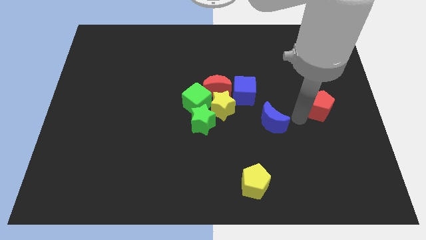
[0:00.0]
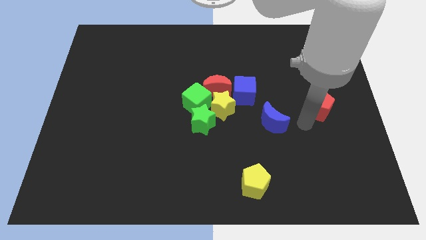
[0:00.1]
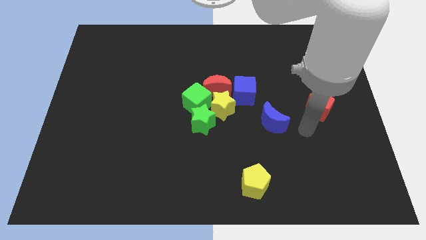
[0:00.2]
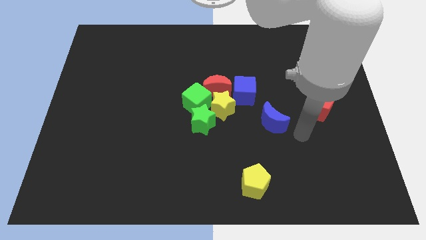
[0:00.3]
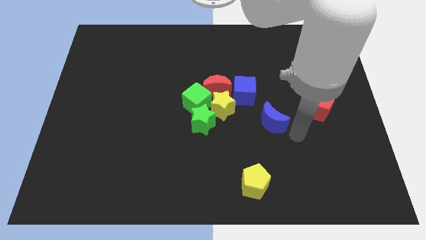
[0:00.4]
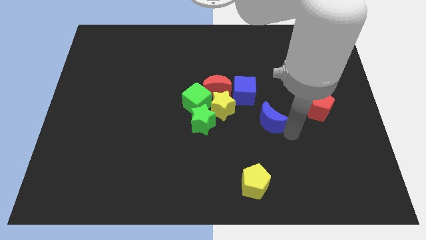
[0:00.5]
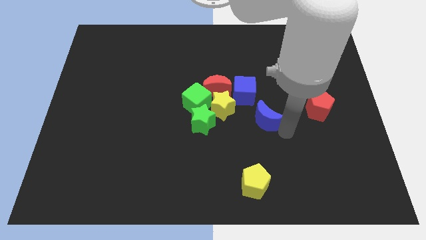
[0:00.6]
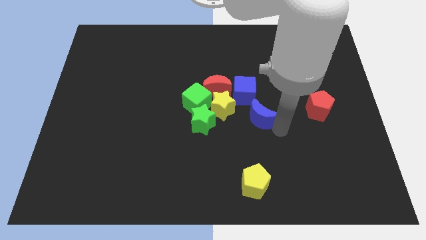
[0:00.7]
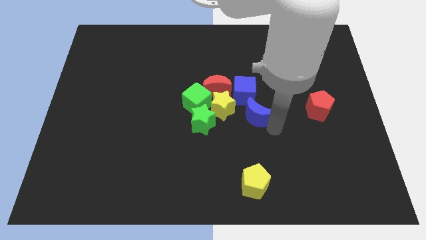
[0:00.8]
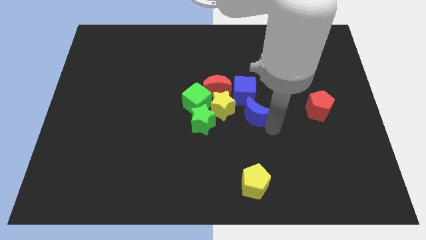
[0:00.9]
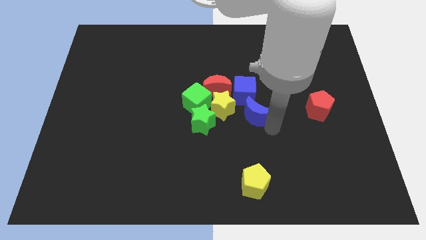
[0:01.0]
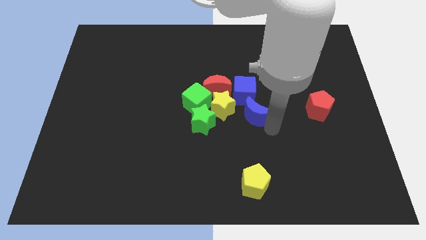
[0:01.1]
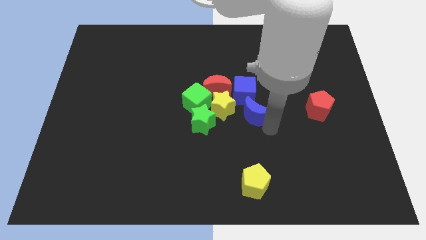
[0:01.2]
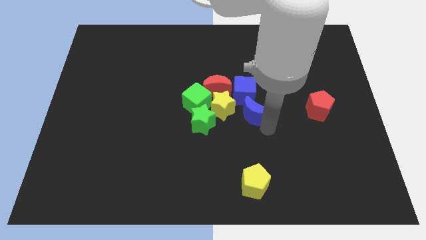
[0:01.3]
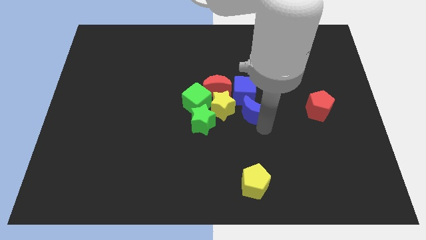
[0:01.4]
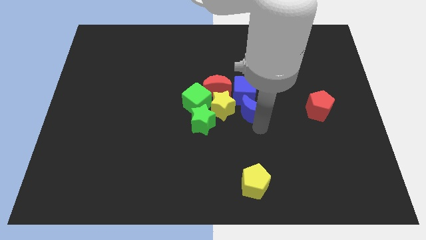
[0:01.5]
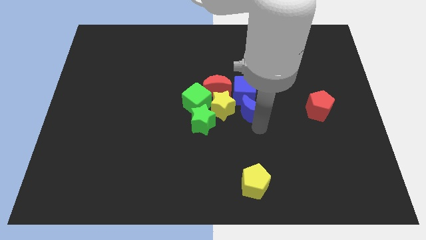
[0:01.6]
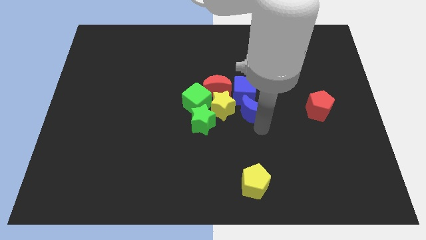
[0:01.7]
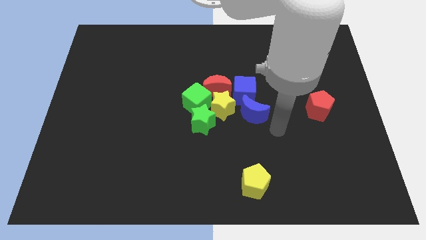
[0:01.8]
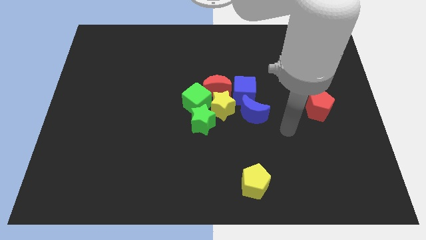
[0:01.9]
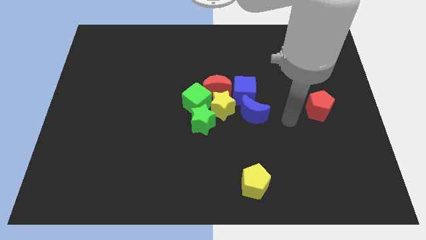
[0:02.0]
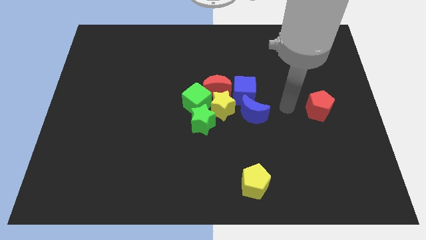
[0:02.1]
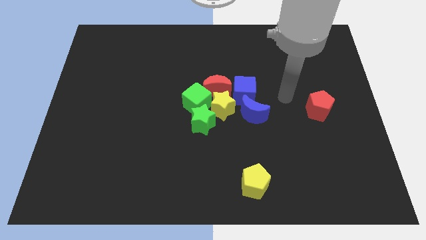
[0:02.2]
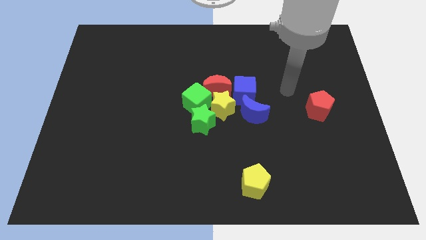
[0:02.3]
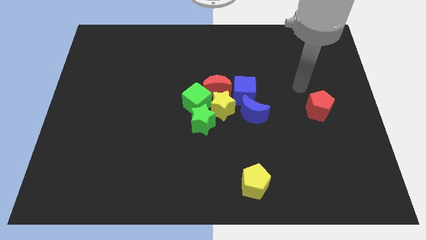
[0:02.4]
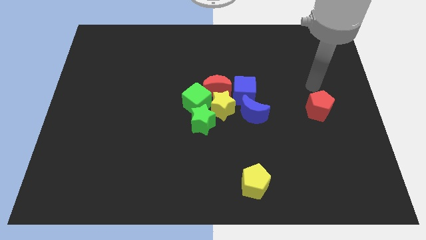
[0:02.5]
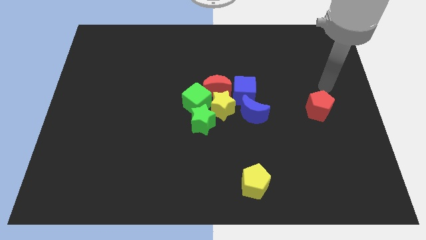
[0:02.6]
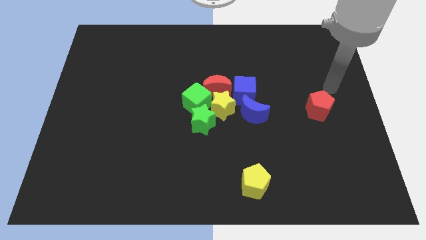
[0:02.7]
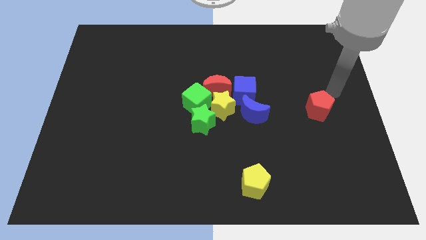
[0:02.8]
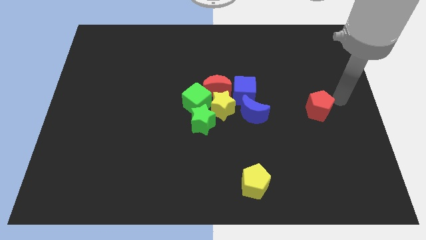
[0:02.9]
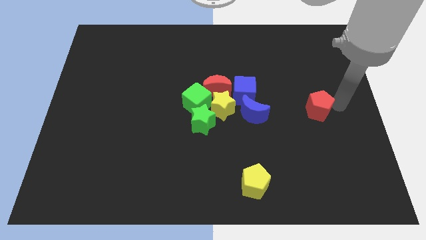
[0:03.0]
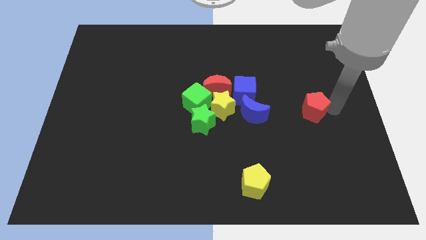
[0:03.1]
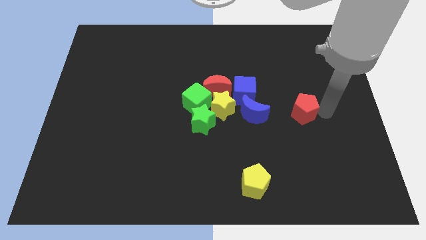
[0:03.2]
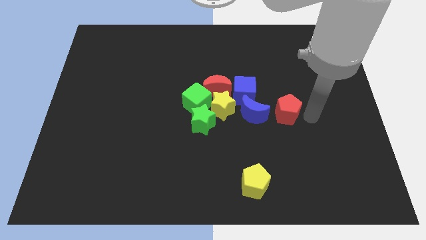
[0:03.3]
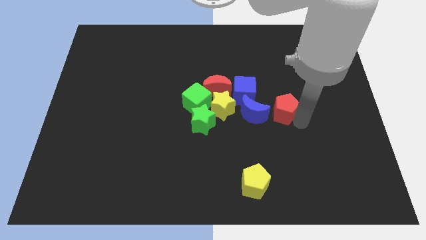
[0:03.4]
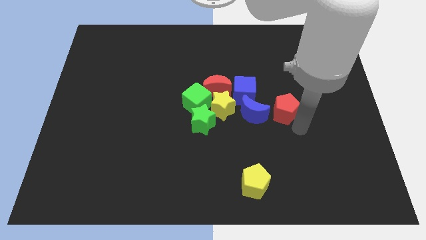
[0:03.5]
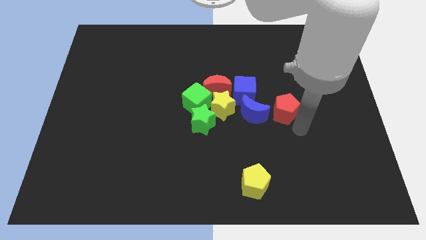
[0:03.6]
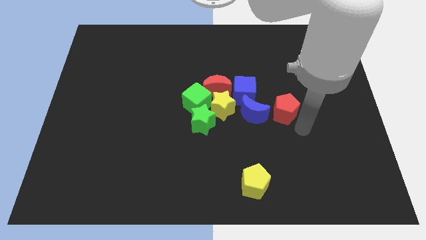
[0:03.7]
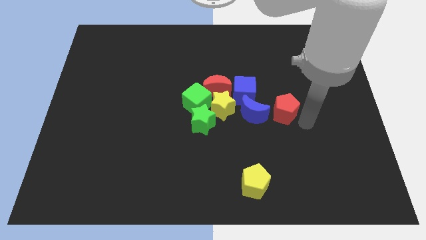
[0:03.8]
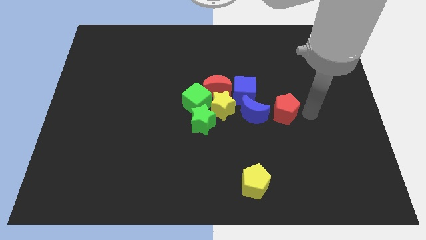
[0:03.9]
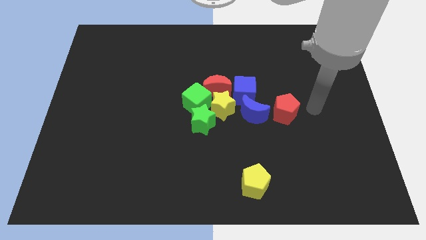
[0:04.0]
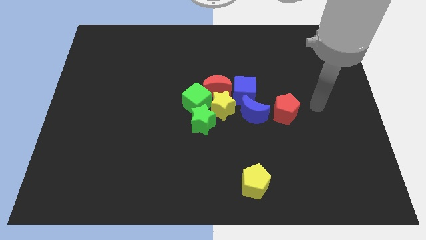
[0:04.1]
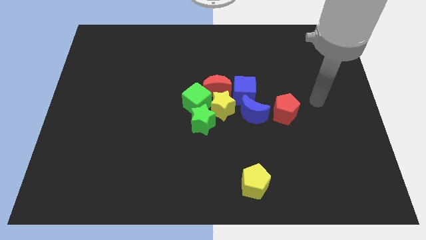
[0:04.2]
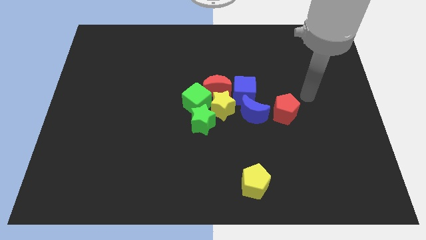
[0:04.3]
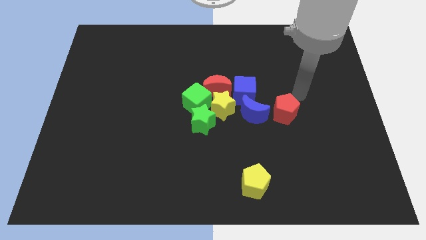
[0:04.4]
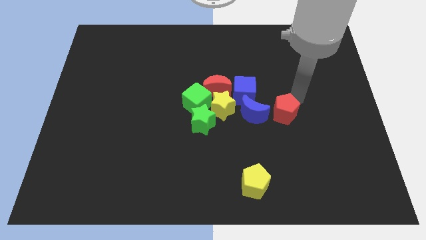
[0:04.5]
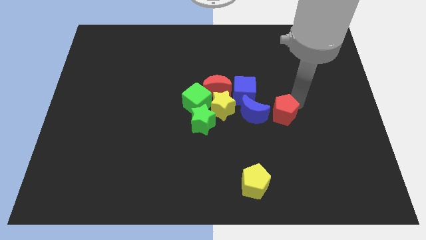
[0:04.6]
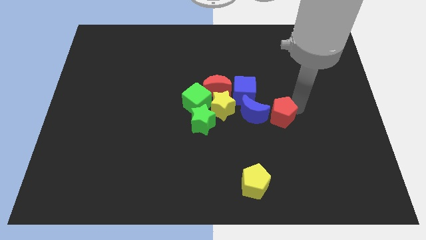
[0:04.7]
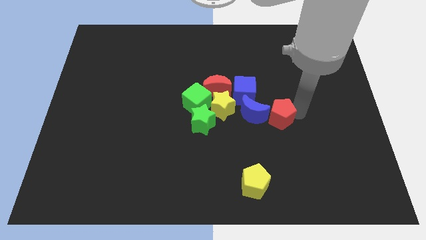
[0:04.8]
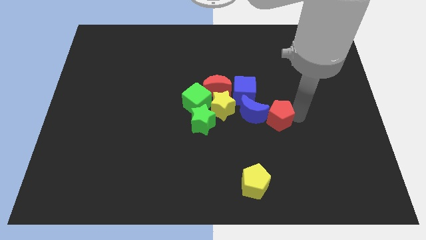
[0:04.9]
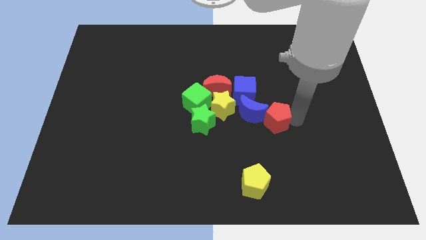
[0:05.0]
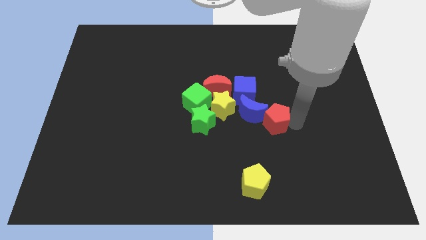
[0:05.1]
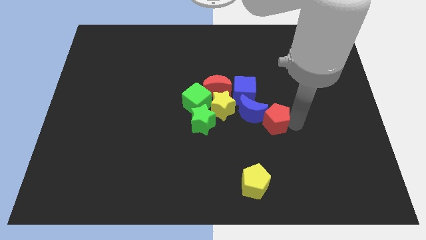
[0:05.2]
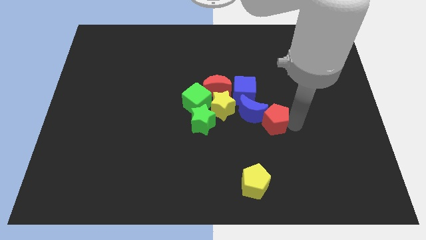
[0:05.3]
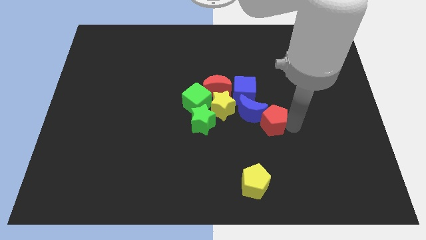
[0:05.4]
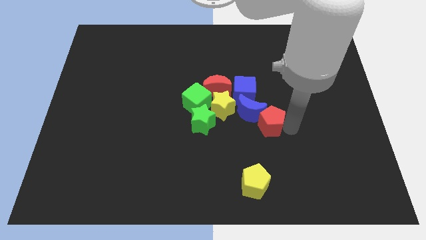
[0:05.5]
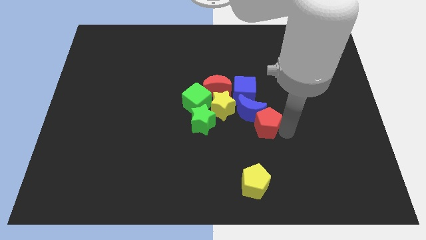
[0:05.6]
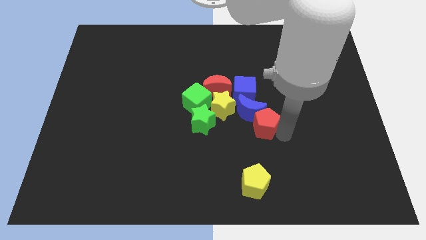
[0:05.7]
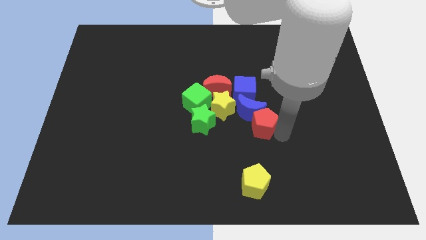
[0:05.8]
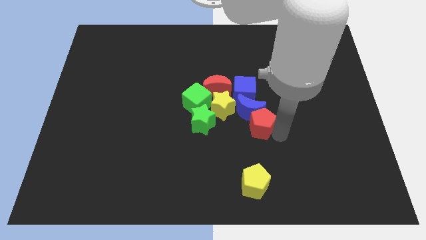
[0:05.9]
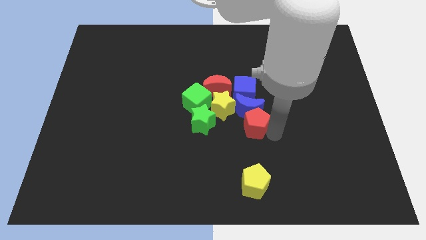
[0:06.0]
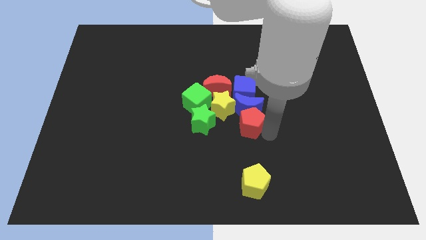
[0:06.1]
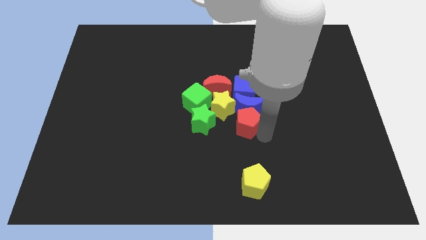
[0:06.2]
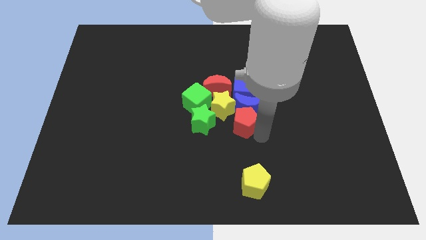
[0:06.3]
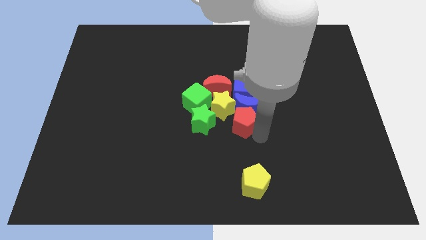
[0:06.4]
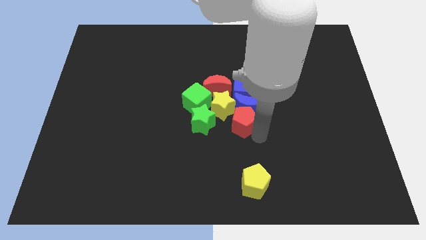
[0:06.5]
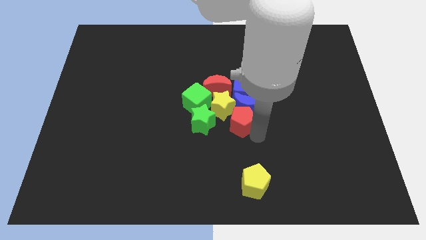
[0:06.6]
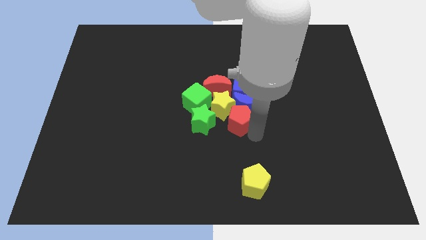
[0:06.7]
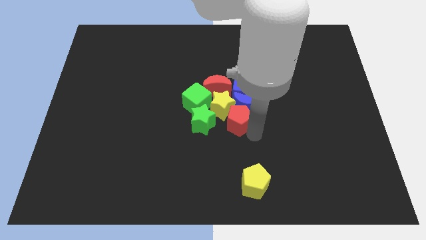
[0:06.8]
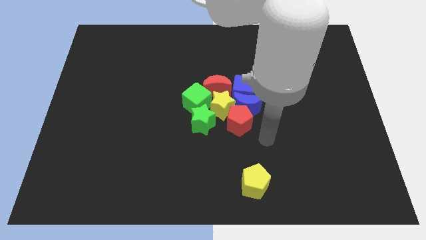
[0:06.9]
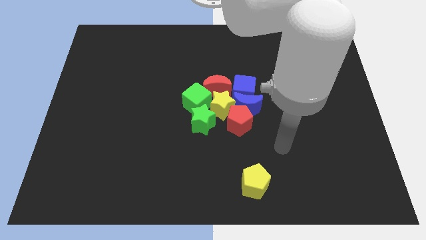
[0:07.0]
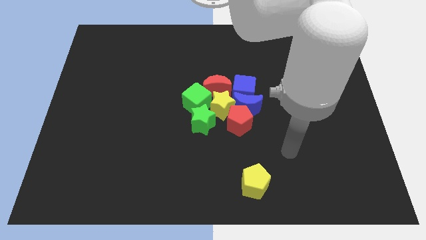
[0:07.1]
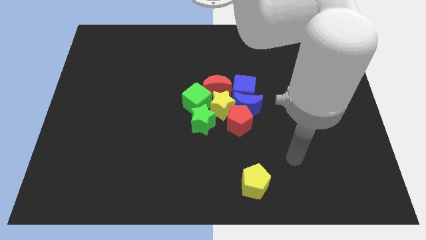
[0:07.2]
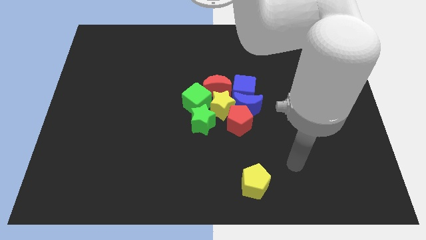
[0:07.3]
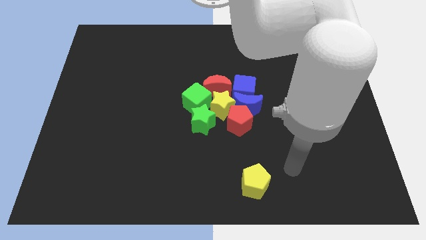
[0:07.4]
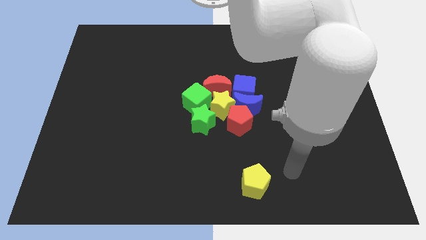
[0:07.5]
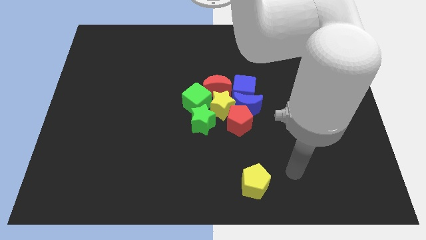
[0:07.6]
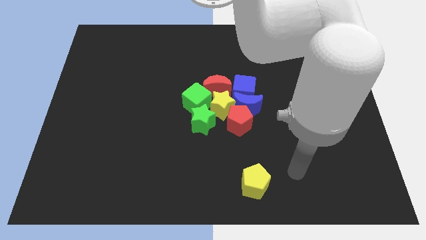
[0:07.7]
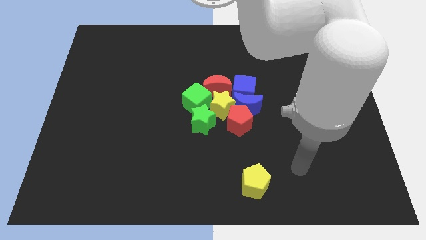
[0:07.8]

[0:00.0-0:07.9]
make a group of blocks except yellow pentagon

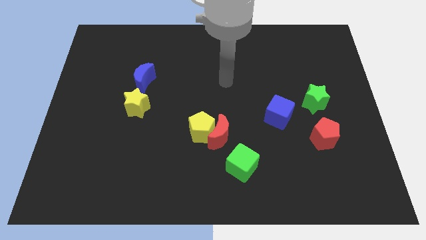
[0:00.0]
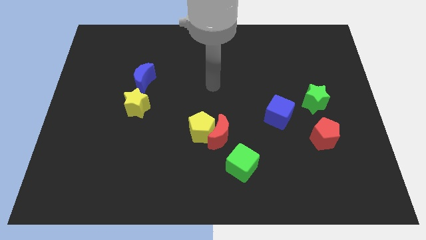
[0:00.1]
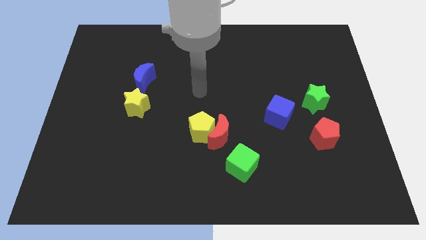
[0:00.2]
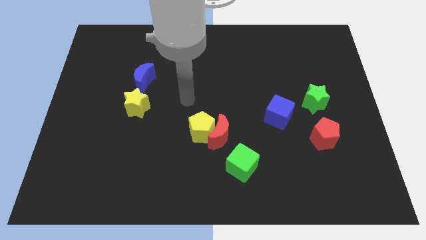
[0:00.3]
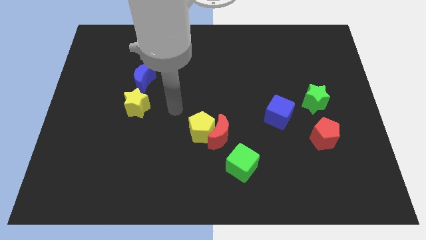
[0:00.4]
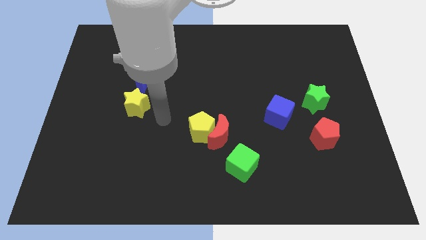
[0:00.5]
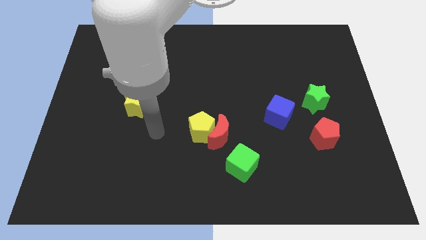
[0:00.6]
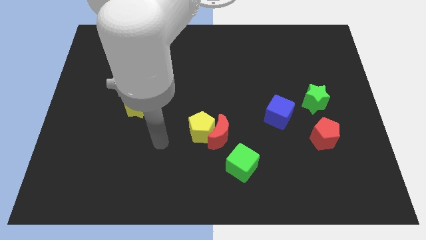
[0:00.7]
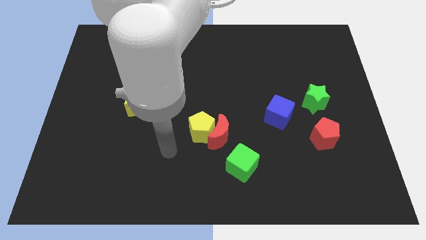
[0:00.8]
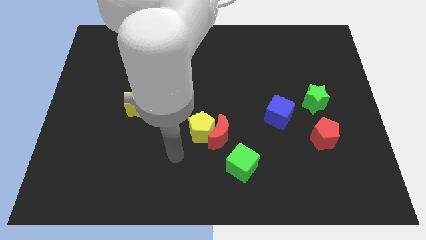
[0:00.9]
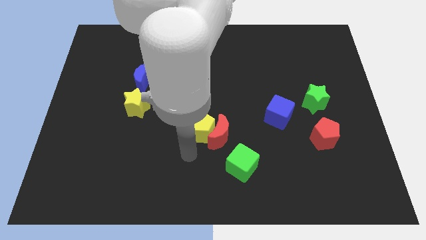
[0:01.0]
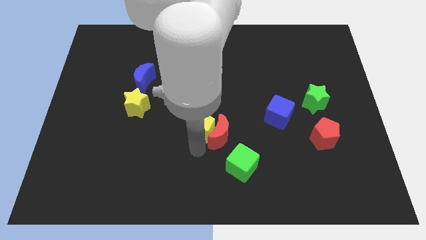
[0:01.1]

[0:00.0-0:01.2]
point your hand below the yellow pentagon
